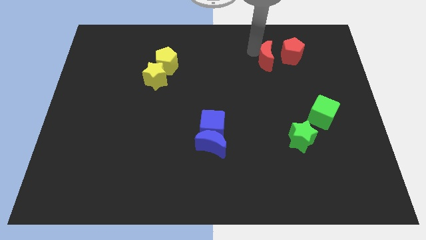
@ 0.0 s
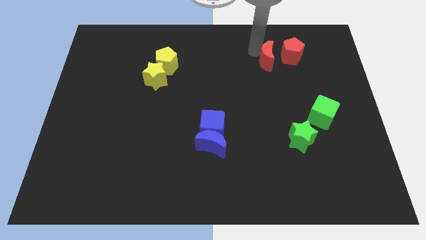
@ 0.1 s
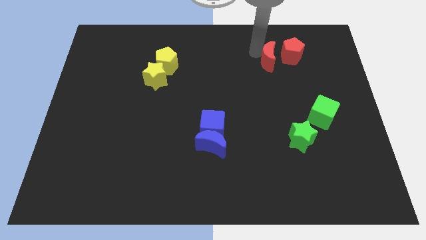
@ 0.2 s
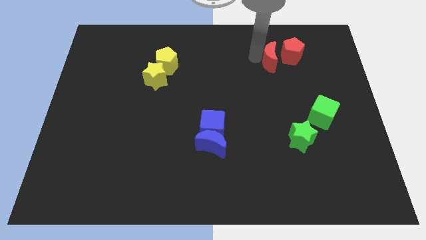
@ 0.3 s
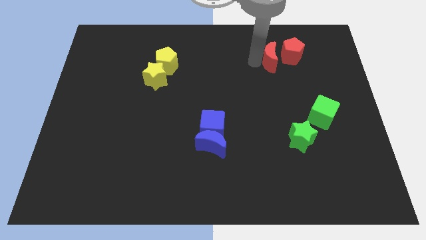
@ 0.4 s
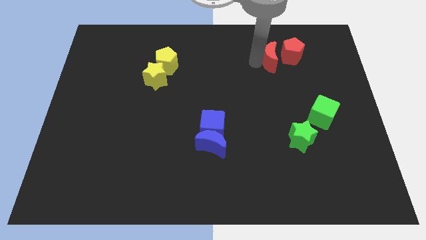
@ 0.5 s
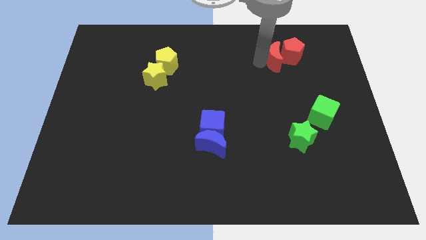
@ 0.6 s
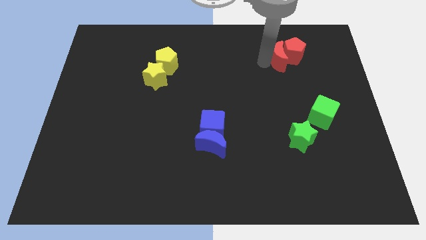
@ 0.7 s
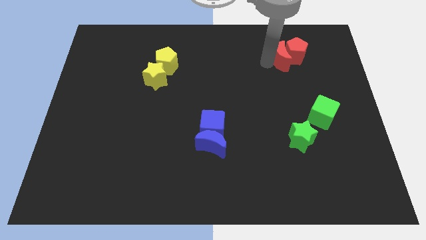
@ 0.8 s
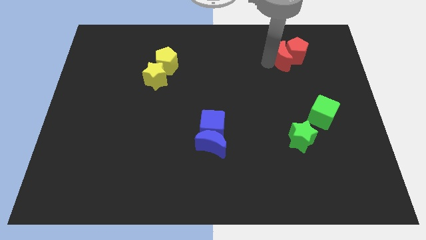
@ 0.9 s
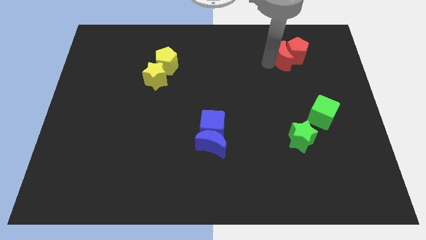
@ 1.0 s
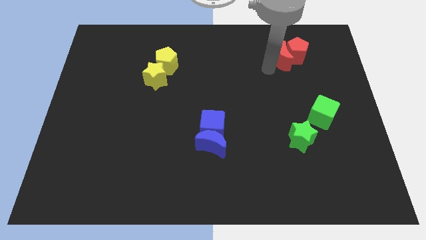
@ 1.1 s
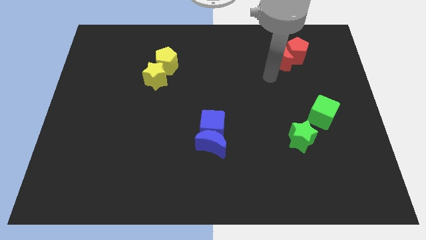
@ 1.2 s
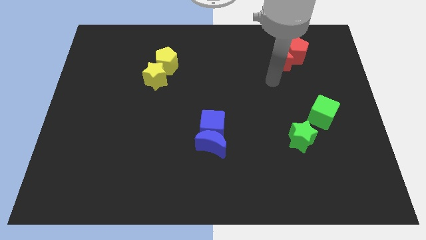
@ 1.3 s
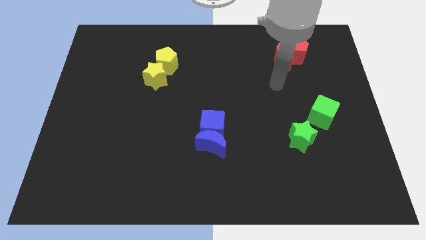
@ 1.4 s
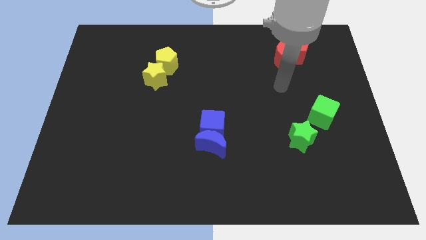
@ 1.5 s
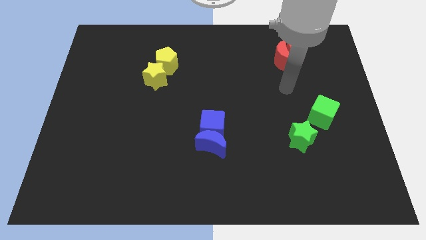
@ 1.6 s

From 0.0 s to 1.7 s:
push the red moon into the red pentagon

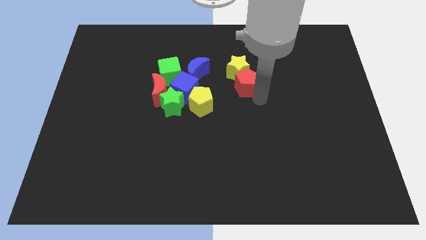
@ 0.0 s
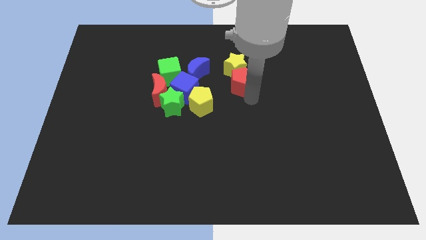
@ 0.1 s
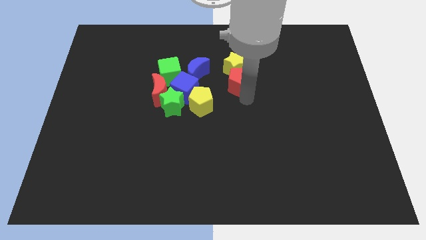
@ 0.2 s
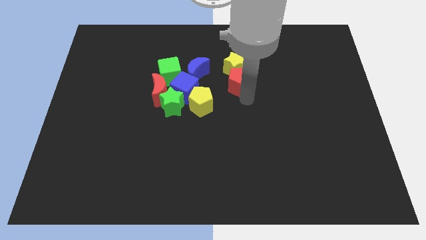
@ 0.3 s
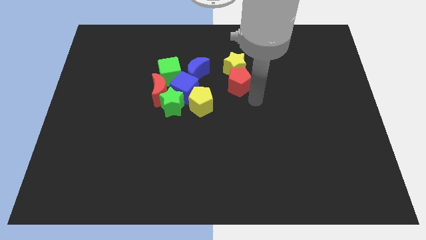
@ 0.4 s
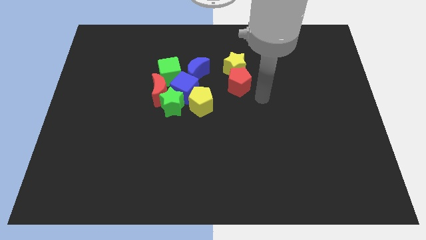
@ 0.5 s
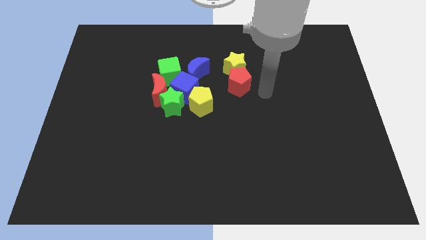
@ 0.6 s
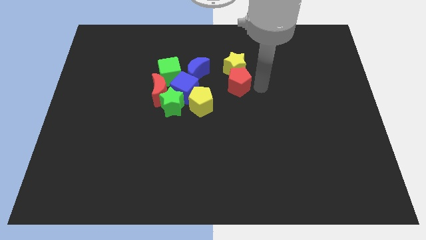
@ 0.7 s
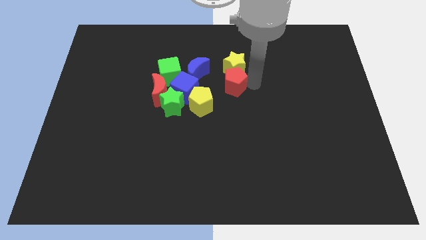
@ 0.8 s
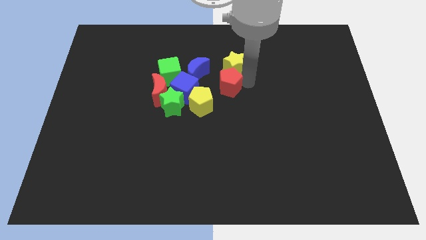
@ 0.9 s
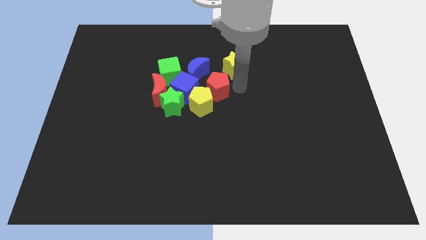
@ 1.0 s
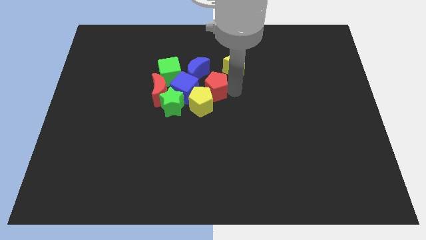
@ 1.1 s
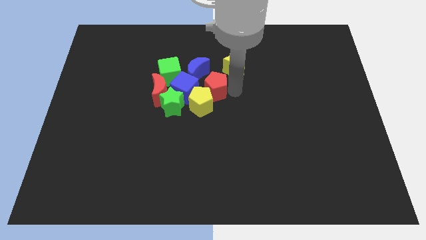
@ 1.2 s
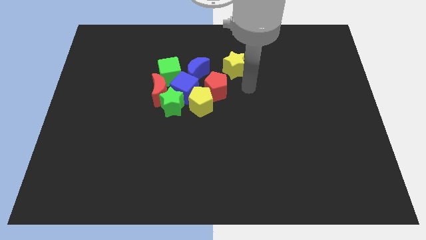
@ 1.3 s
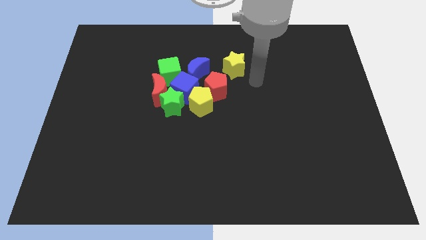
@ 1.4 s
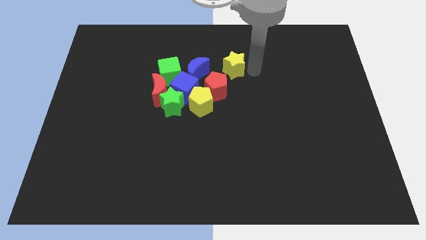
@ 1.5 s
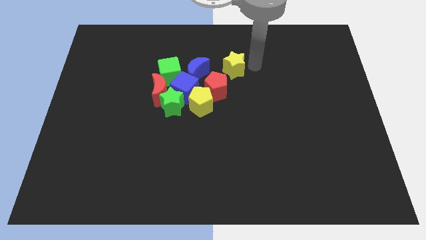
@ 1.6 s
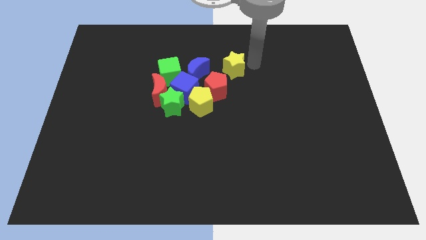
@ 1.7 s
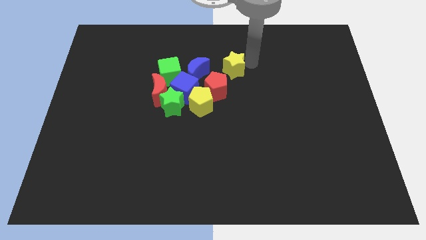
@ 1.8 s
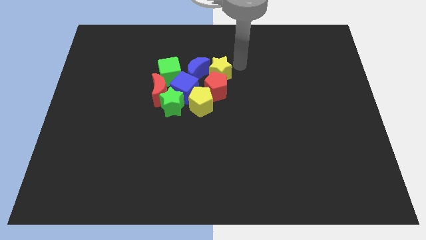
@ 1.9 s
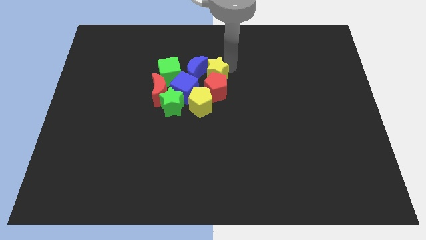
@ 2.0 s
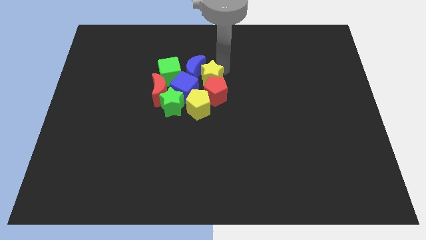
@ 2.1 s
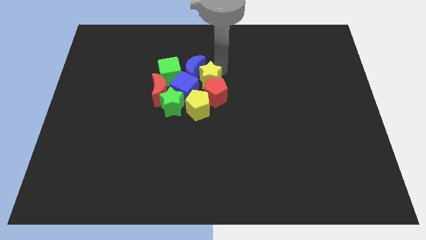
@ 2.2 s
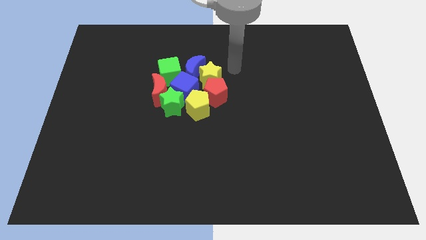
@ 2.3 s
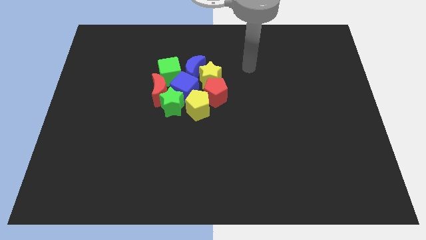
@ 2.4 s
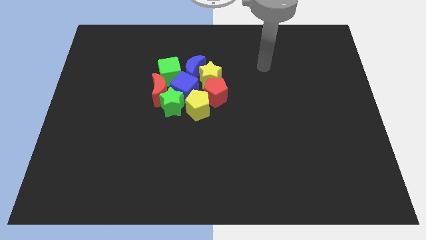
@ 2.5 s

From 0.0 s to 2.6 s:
drag red pentagon and yellow star slightly to the middle of the table

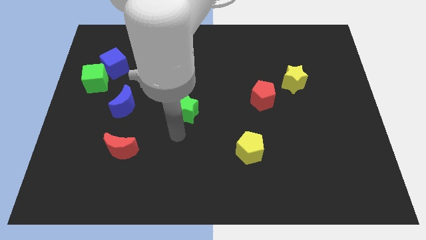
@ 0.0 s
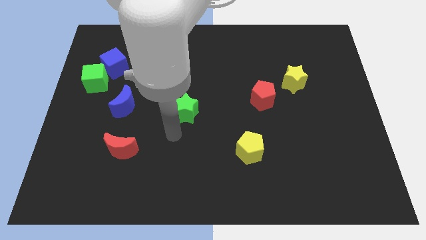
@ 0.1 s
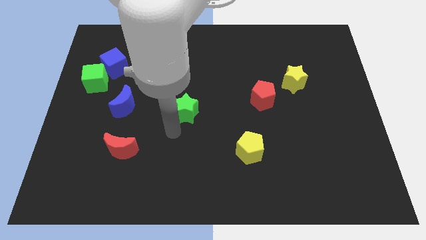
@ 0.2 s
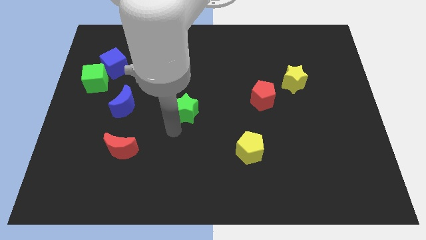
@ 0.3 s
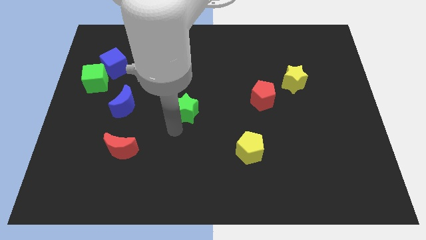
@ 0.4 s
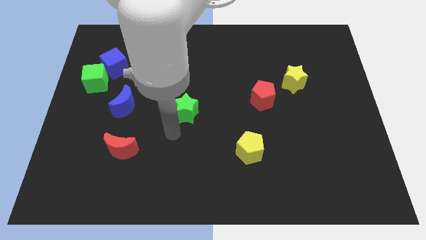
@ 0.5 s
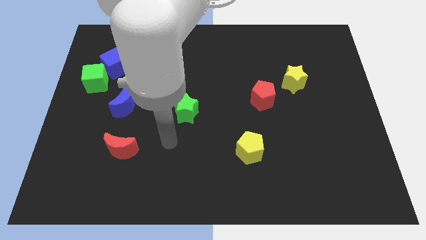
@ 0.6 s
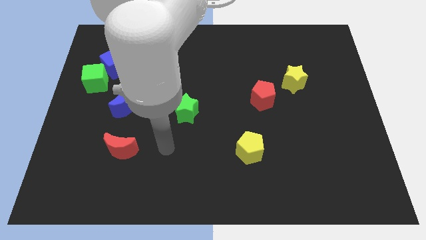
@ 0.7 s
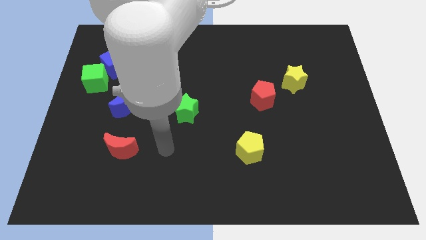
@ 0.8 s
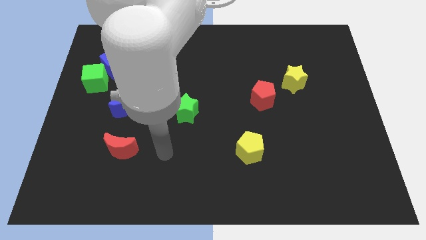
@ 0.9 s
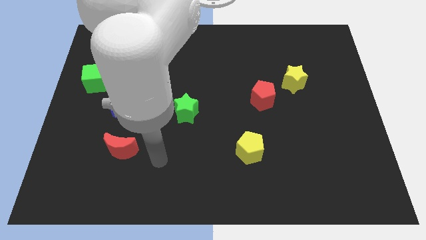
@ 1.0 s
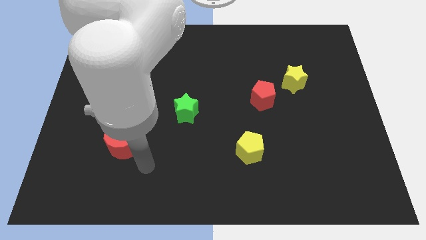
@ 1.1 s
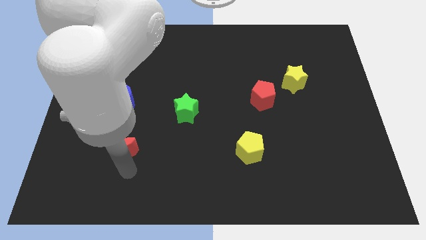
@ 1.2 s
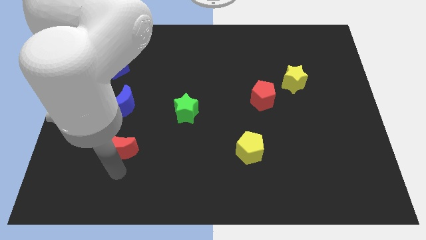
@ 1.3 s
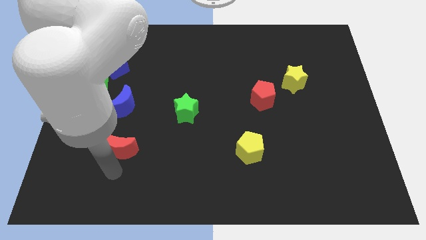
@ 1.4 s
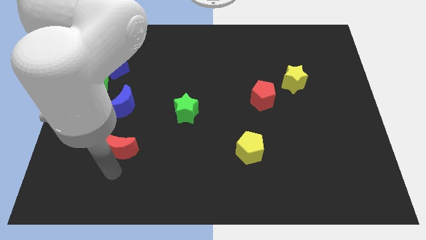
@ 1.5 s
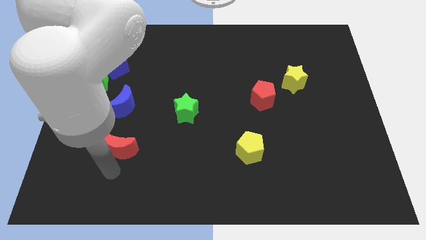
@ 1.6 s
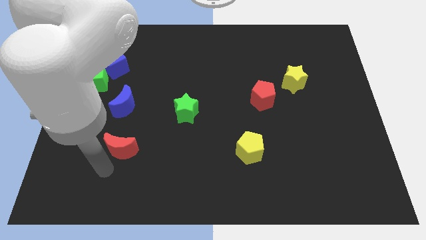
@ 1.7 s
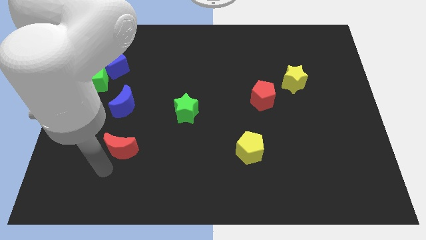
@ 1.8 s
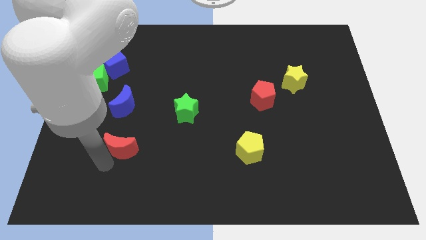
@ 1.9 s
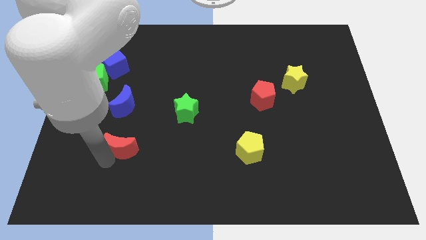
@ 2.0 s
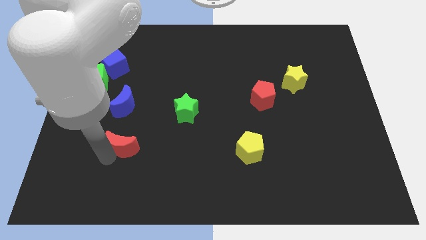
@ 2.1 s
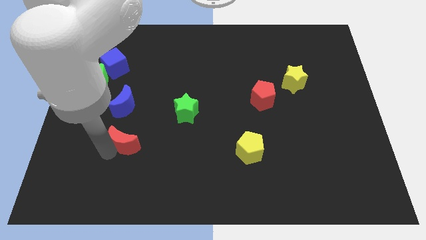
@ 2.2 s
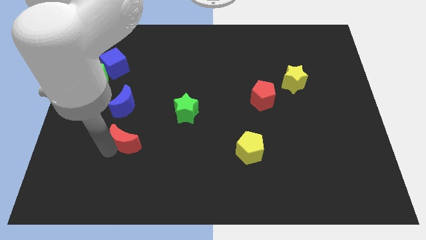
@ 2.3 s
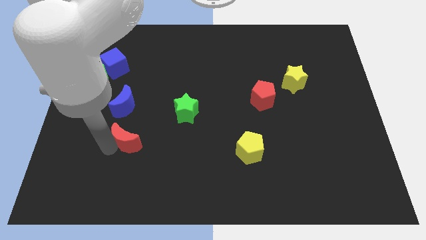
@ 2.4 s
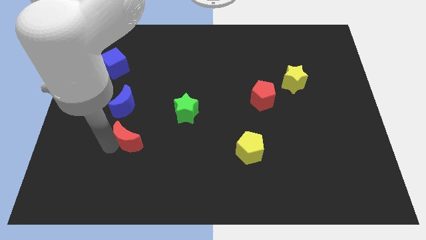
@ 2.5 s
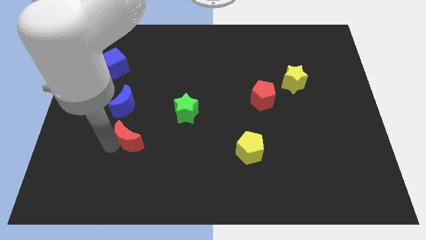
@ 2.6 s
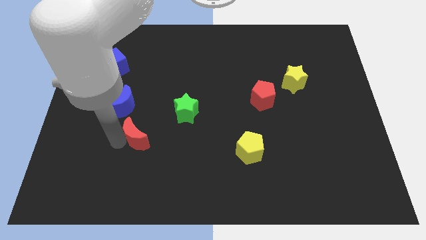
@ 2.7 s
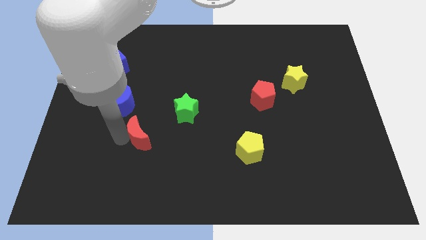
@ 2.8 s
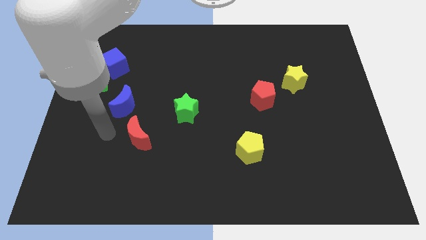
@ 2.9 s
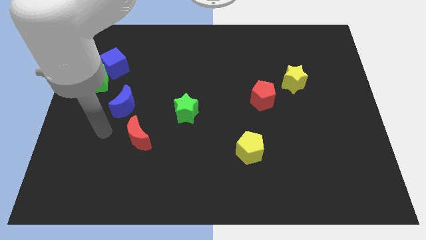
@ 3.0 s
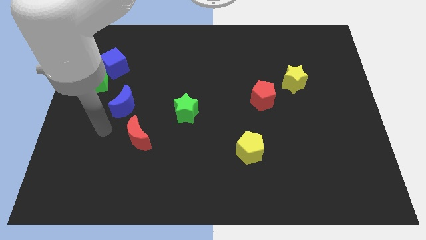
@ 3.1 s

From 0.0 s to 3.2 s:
push red crescent to the bottom right of blue crescent

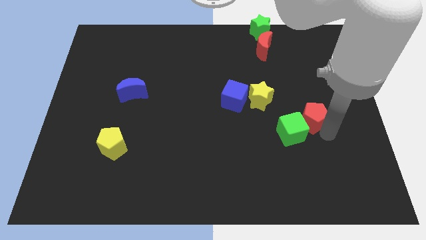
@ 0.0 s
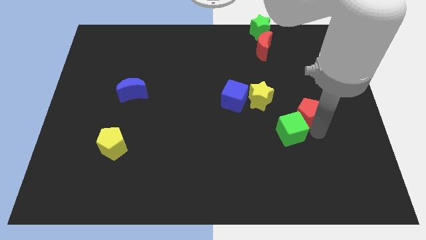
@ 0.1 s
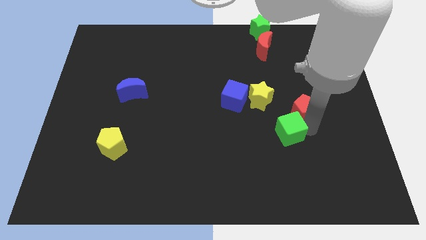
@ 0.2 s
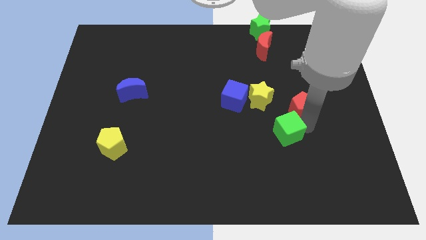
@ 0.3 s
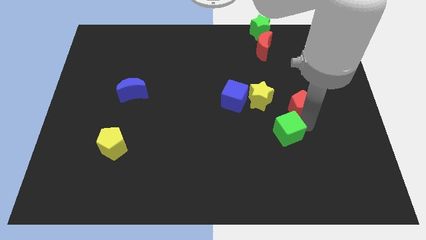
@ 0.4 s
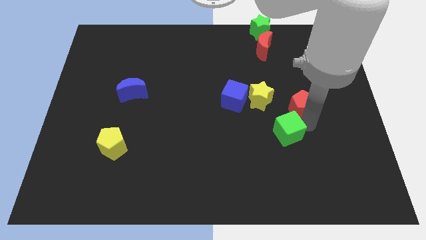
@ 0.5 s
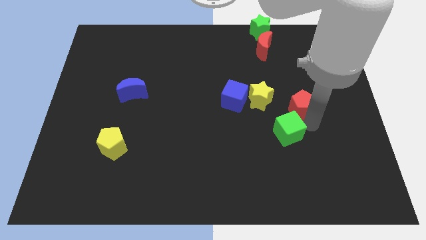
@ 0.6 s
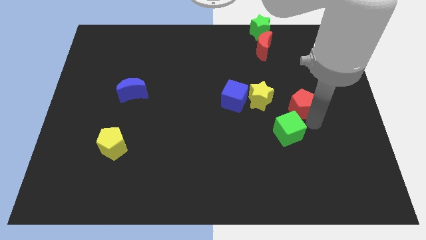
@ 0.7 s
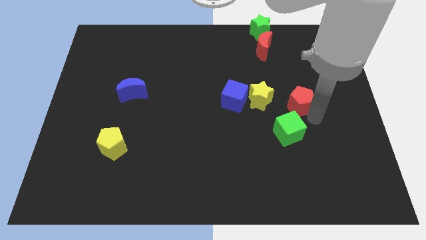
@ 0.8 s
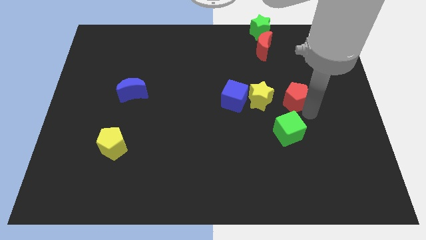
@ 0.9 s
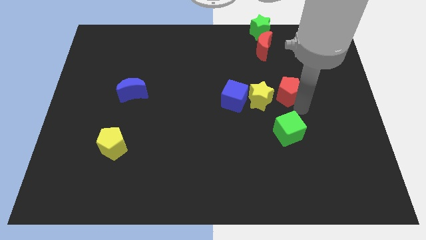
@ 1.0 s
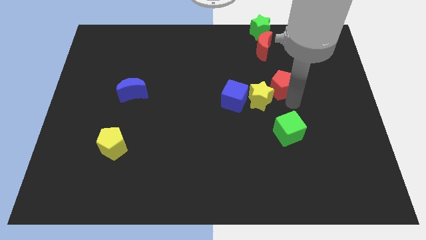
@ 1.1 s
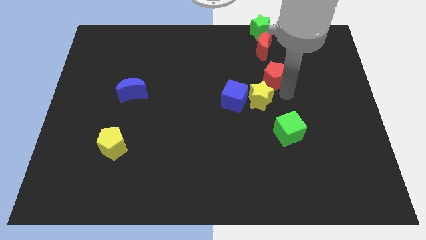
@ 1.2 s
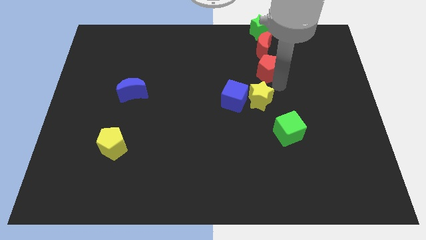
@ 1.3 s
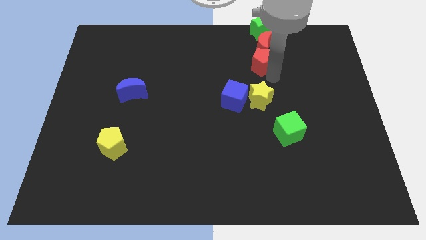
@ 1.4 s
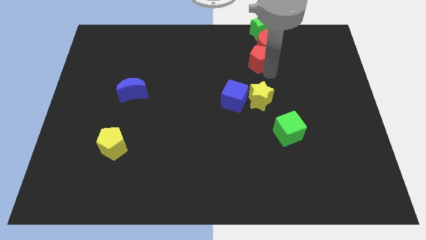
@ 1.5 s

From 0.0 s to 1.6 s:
place the red pentagon below the red crescent
